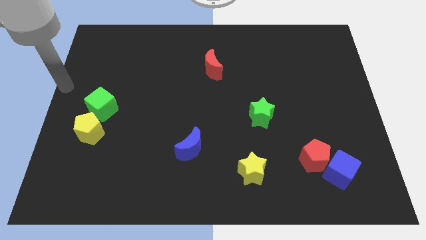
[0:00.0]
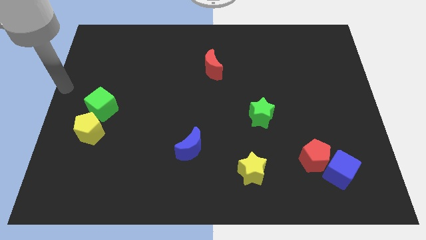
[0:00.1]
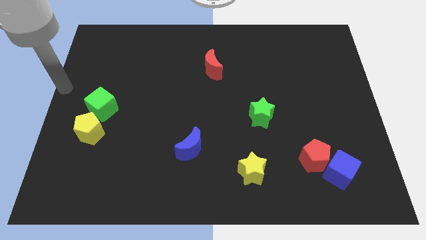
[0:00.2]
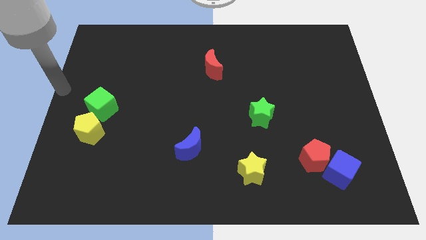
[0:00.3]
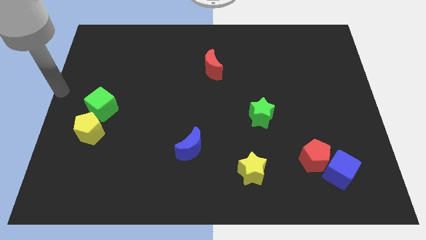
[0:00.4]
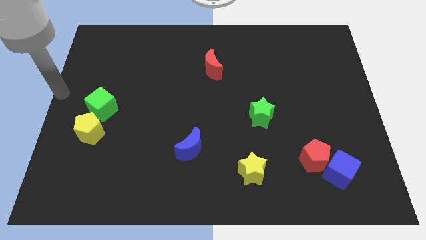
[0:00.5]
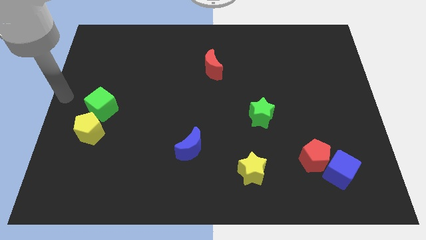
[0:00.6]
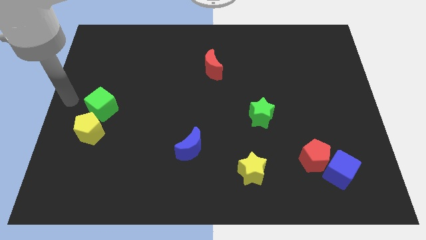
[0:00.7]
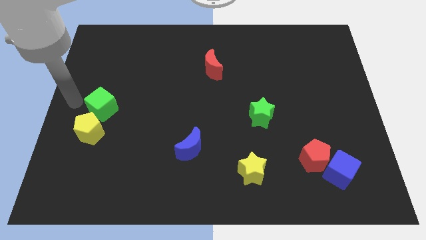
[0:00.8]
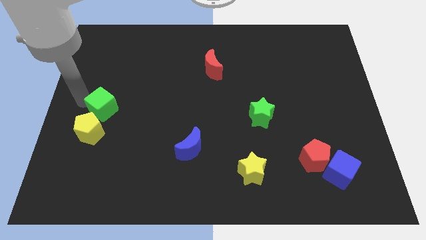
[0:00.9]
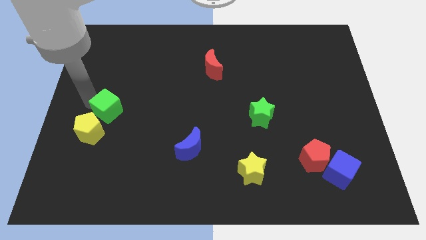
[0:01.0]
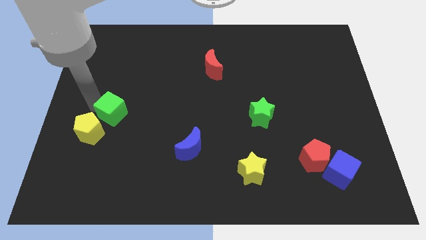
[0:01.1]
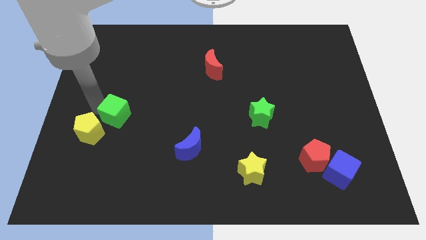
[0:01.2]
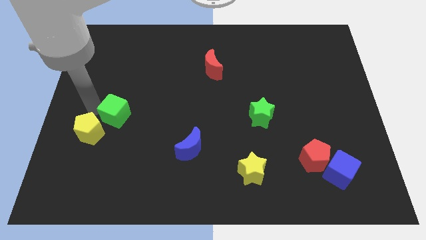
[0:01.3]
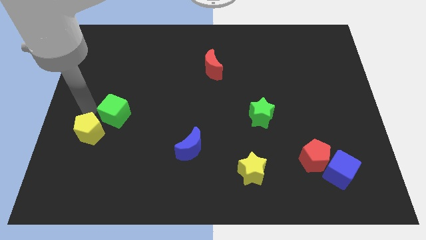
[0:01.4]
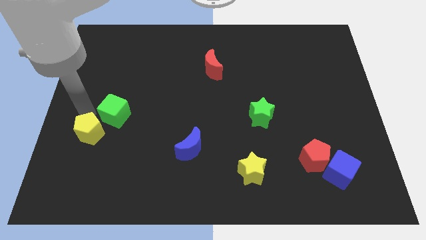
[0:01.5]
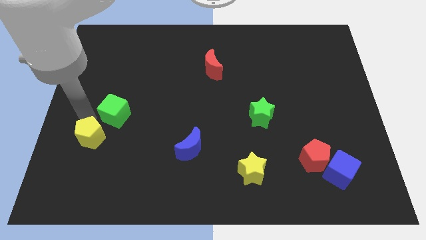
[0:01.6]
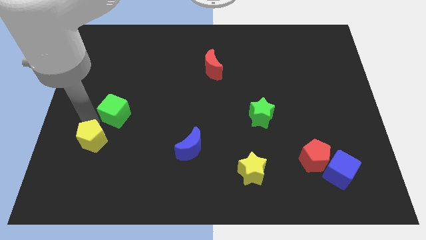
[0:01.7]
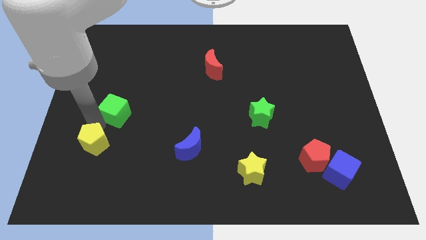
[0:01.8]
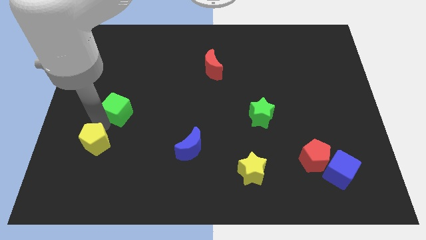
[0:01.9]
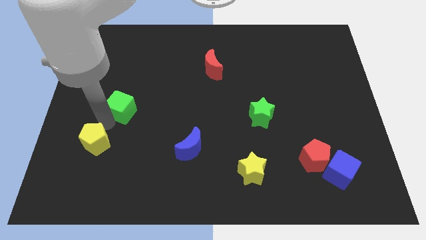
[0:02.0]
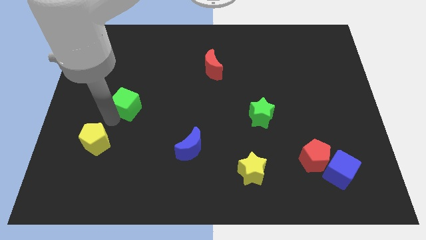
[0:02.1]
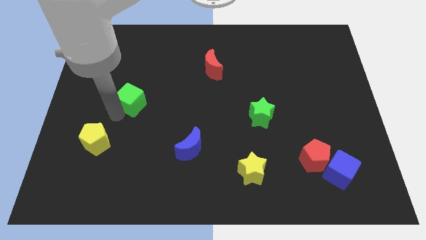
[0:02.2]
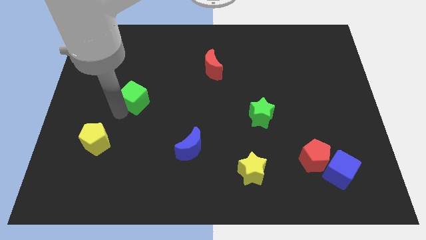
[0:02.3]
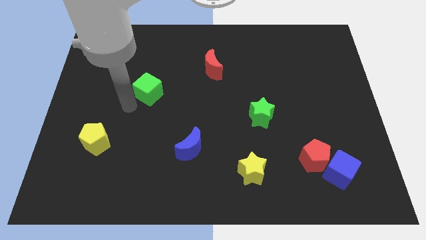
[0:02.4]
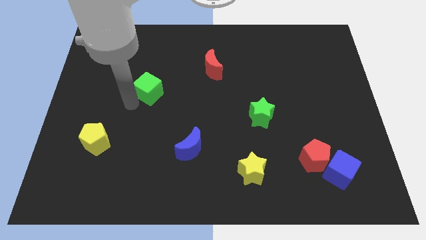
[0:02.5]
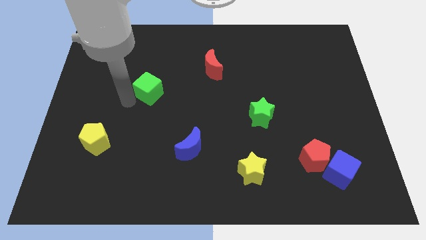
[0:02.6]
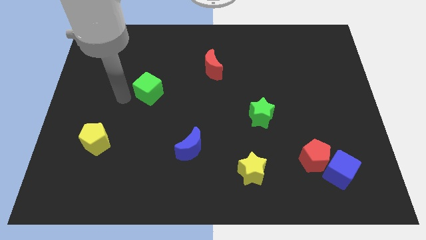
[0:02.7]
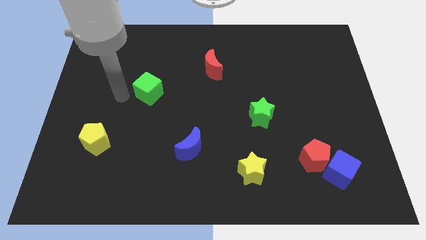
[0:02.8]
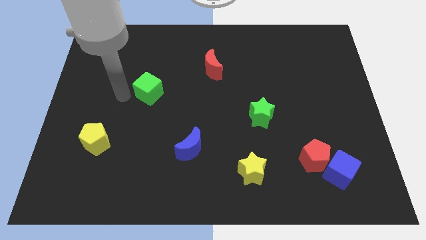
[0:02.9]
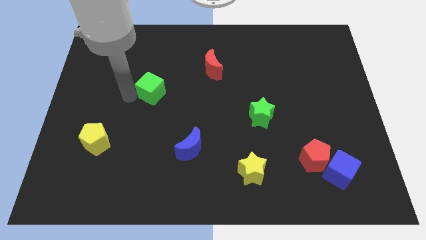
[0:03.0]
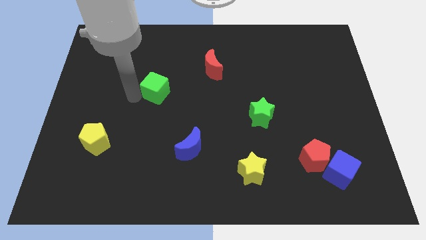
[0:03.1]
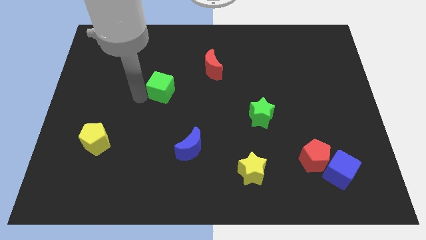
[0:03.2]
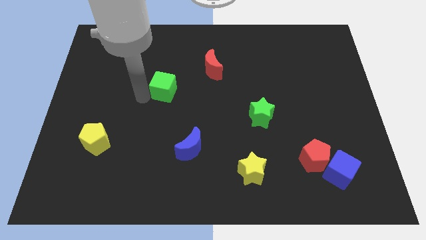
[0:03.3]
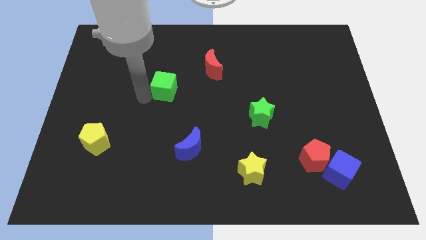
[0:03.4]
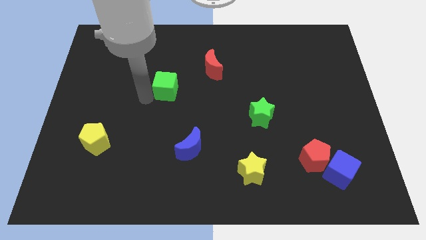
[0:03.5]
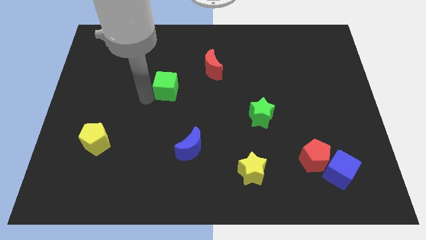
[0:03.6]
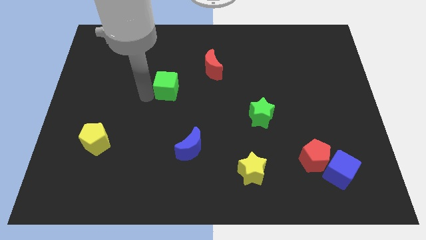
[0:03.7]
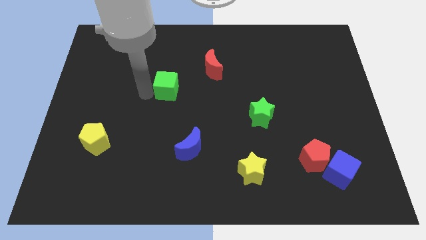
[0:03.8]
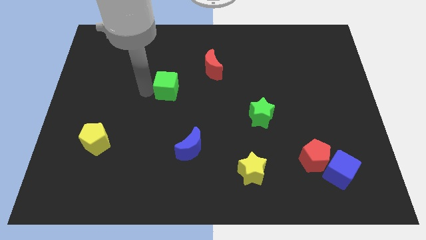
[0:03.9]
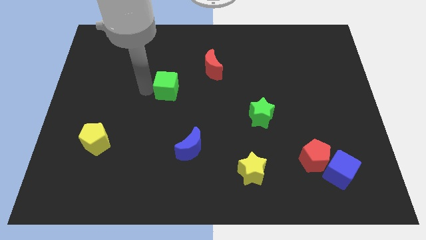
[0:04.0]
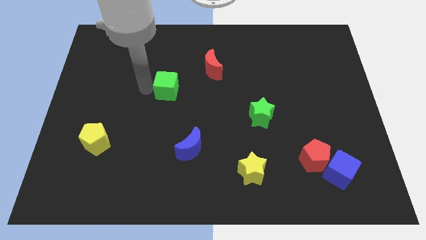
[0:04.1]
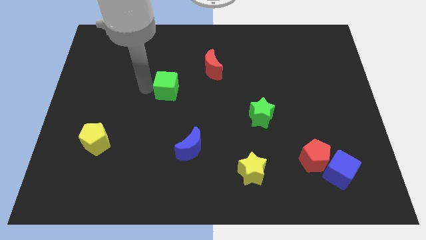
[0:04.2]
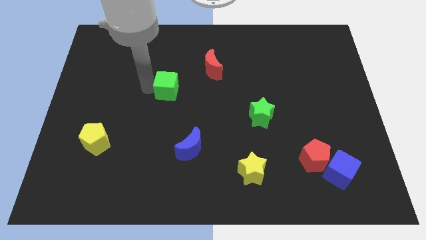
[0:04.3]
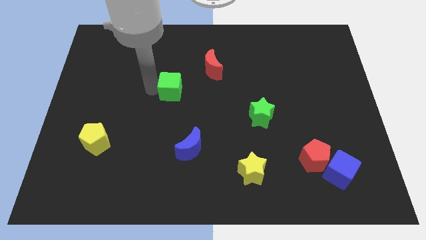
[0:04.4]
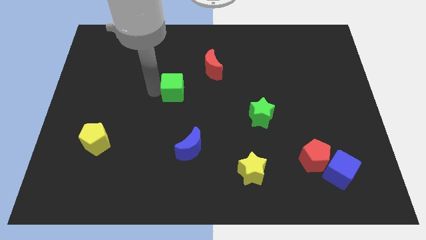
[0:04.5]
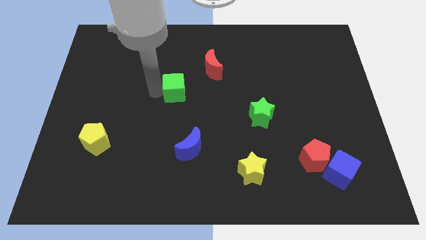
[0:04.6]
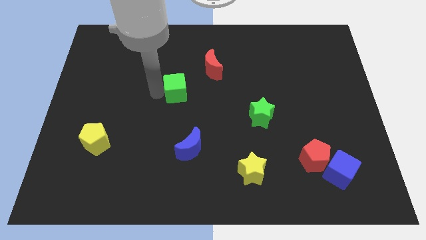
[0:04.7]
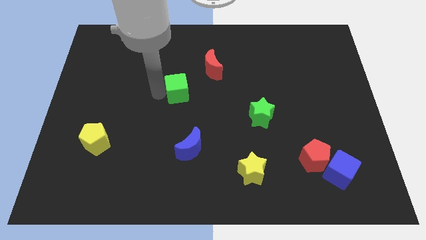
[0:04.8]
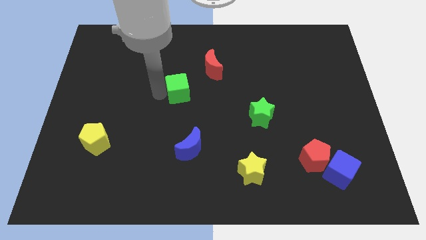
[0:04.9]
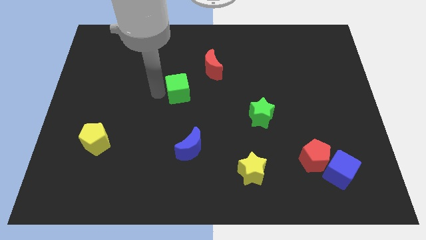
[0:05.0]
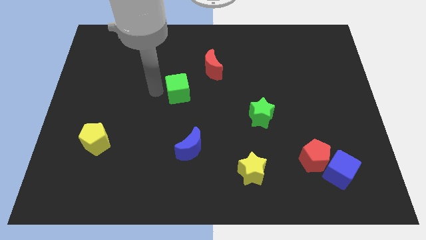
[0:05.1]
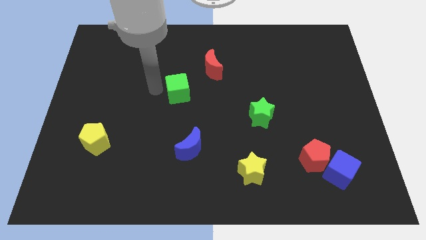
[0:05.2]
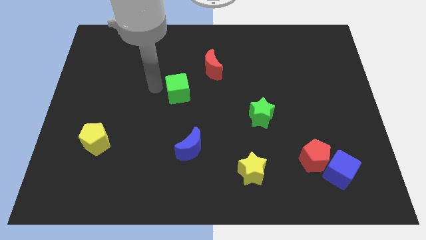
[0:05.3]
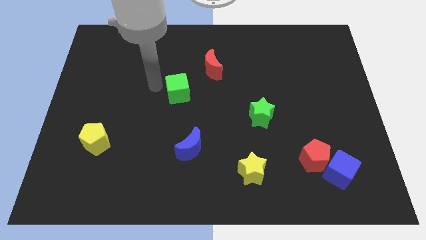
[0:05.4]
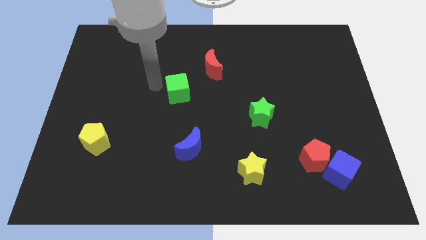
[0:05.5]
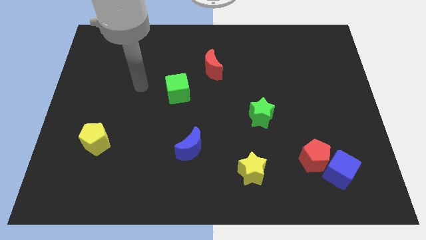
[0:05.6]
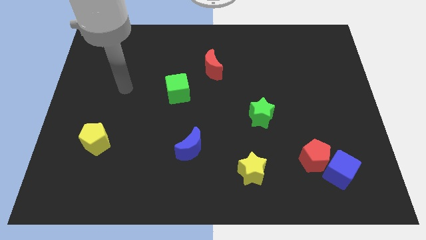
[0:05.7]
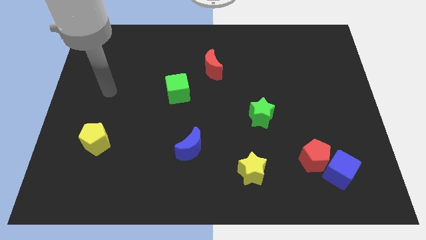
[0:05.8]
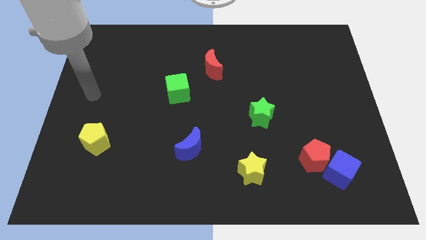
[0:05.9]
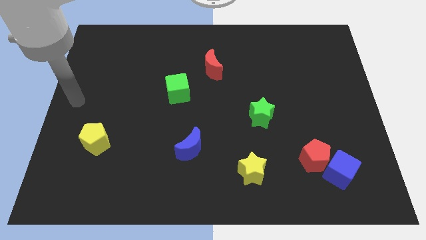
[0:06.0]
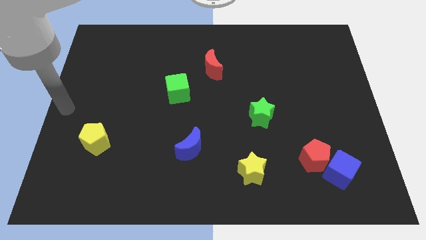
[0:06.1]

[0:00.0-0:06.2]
push the green cube slightly to the right

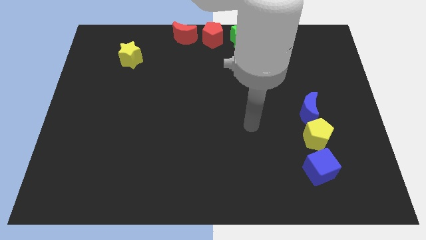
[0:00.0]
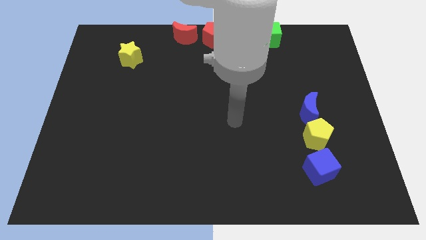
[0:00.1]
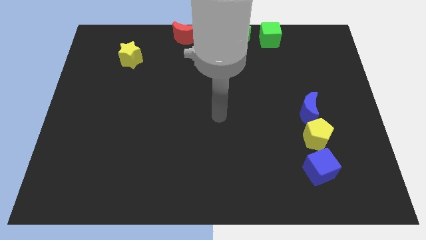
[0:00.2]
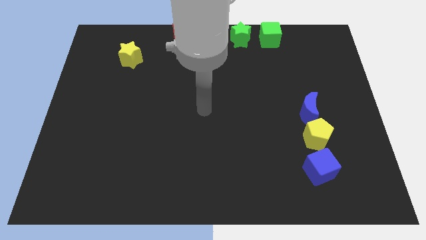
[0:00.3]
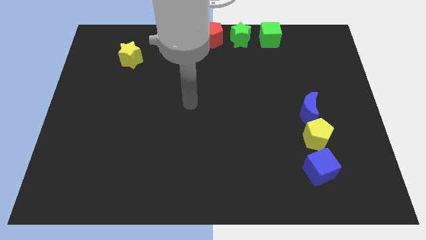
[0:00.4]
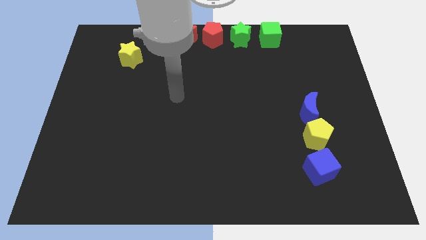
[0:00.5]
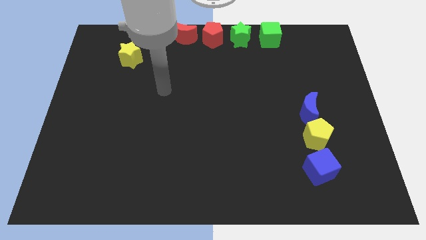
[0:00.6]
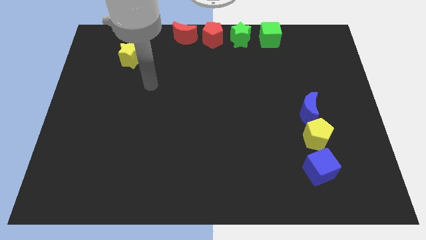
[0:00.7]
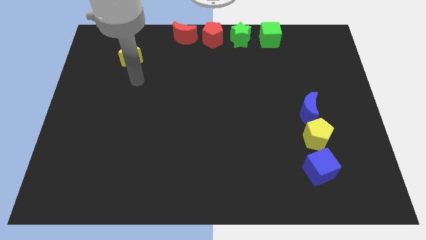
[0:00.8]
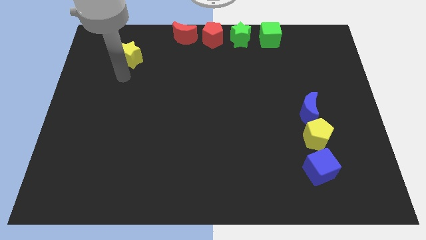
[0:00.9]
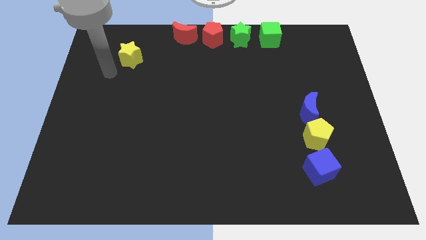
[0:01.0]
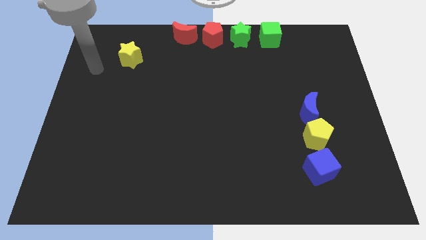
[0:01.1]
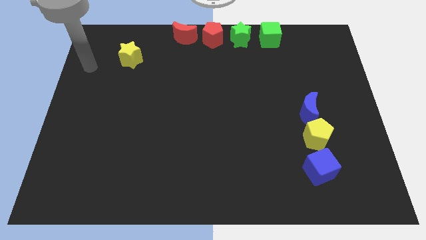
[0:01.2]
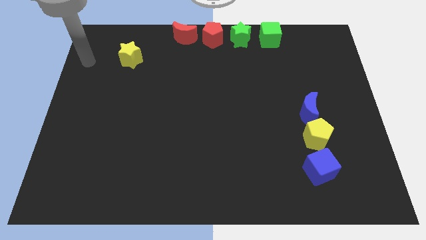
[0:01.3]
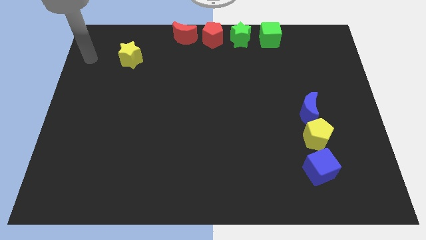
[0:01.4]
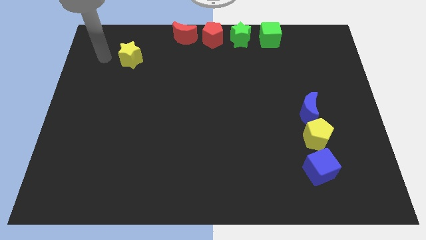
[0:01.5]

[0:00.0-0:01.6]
move your arm towards the top of the yellow star

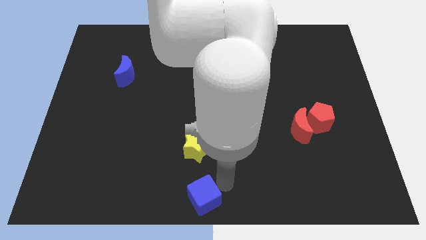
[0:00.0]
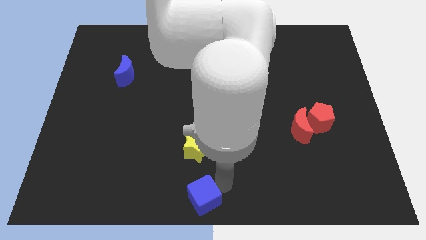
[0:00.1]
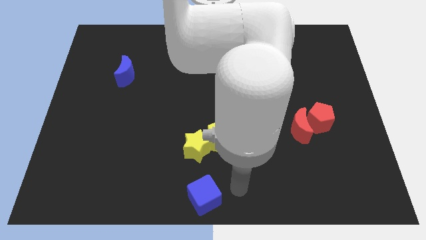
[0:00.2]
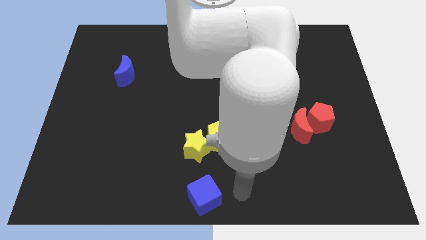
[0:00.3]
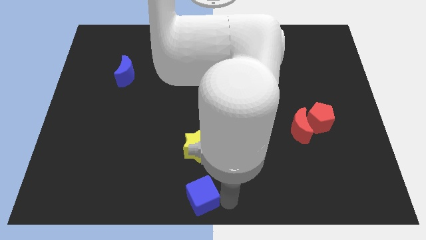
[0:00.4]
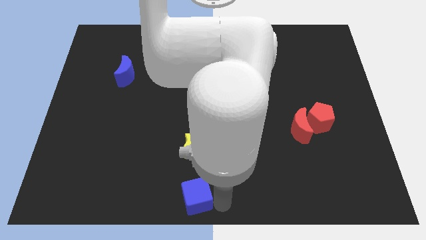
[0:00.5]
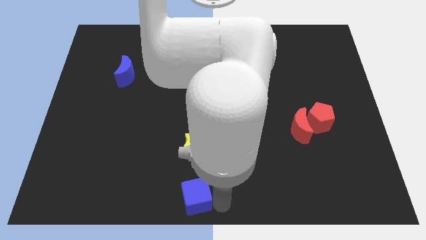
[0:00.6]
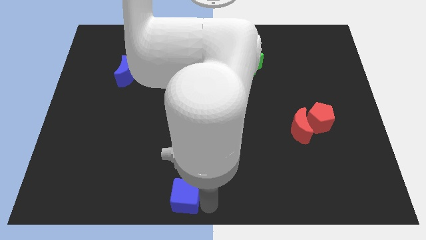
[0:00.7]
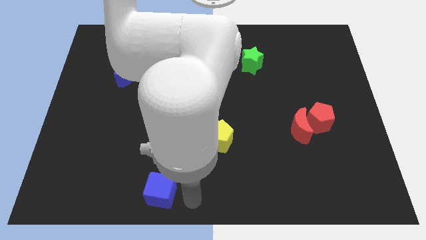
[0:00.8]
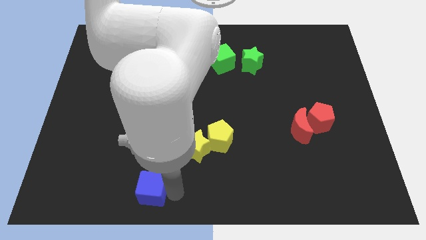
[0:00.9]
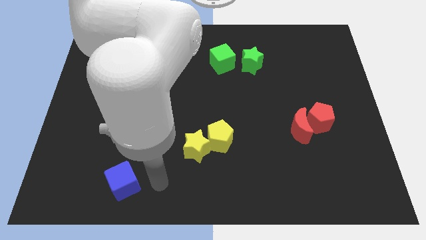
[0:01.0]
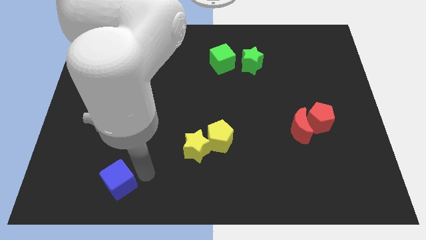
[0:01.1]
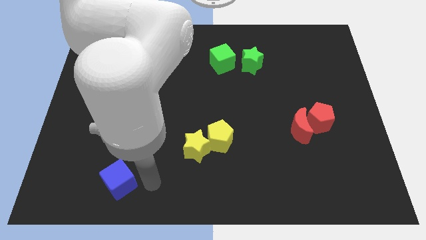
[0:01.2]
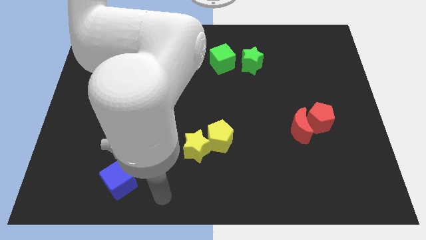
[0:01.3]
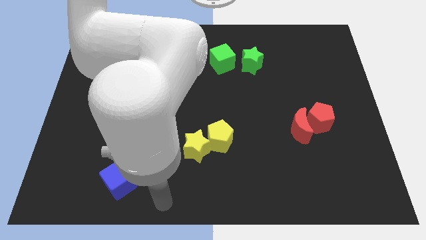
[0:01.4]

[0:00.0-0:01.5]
place blue cube to the bottom left of yellow star
